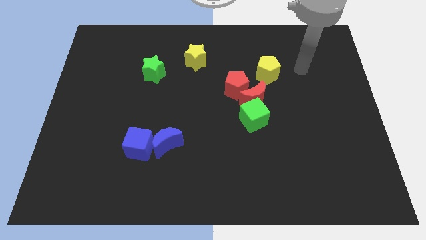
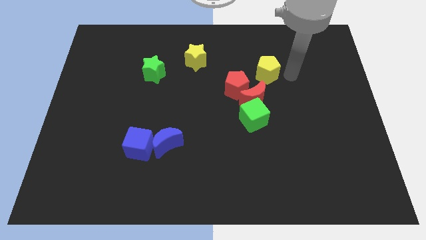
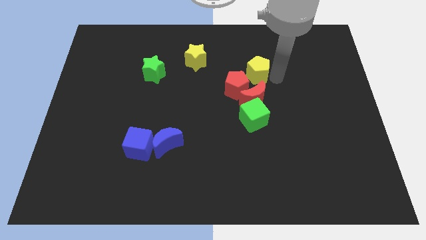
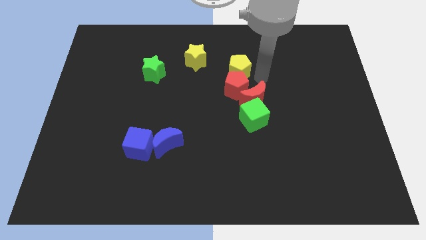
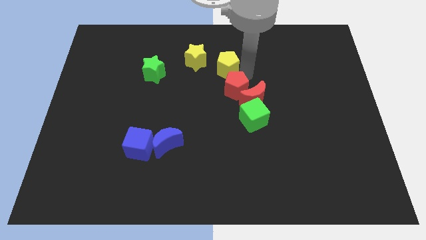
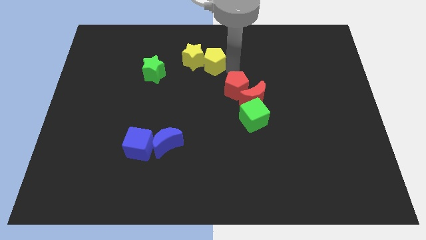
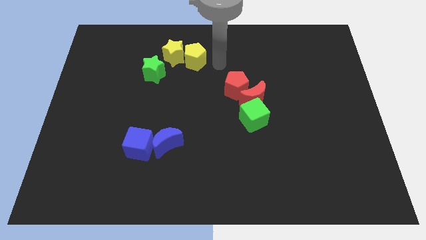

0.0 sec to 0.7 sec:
push the yellow pentagon to the right of the yellow star

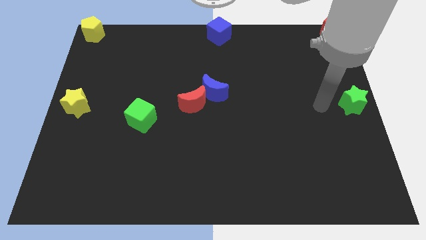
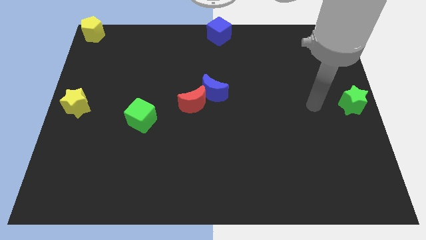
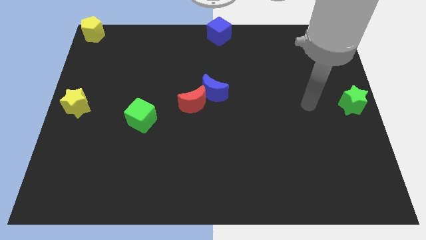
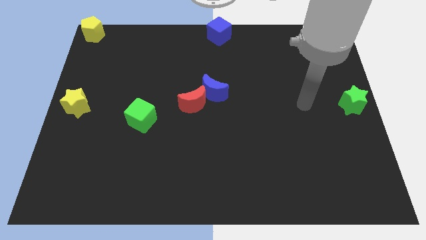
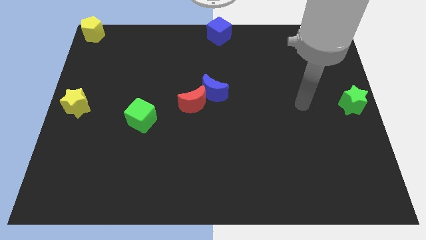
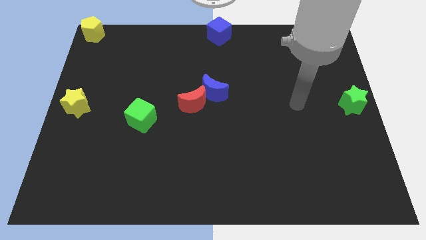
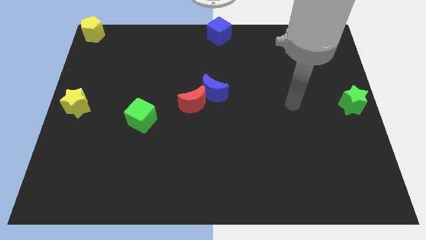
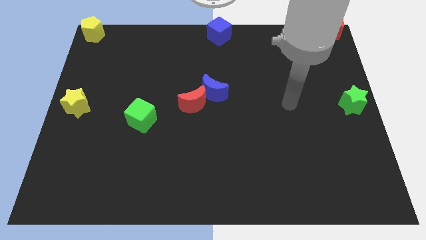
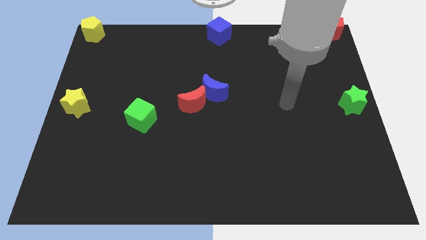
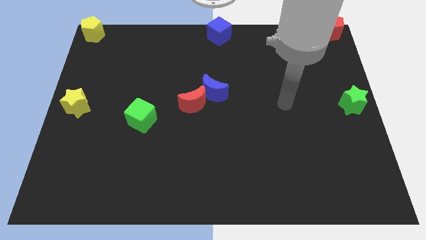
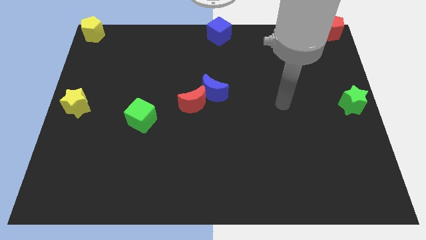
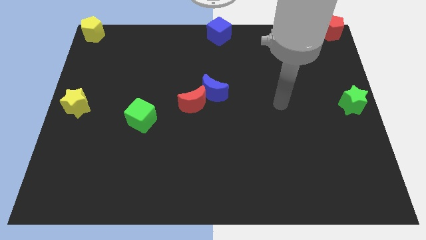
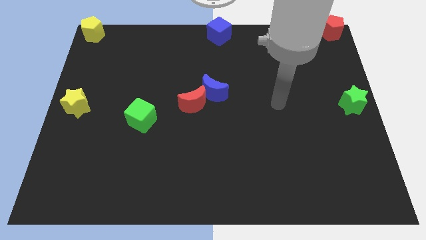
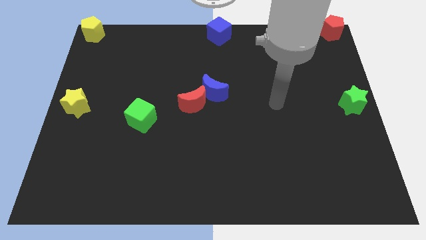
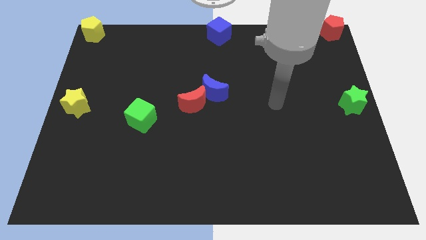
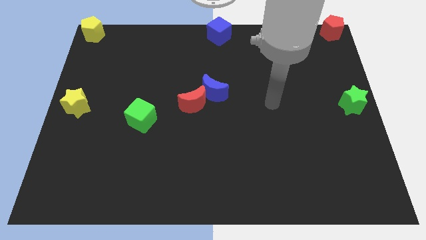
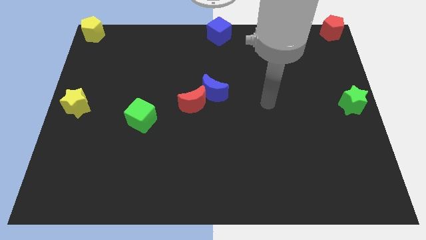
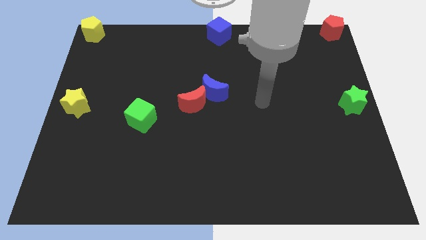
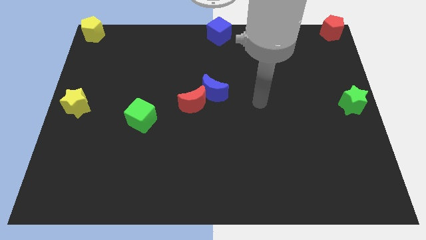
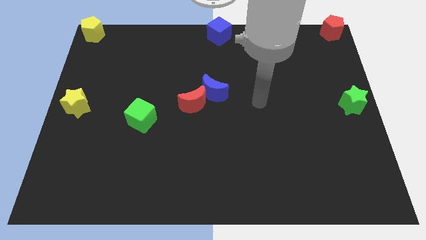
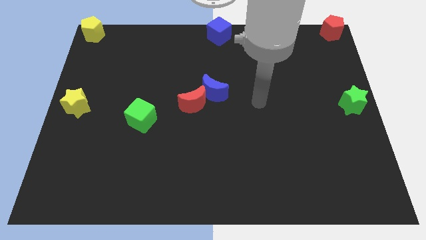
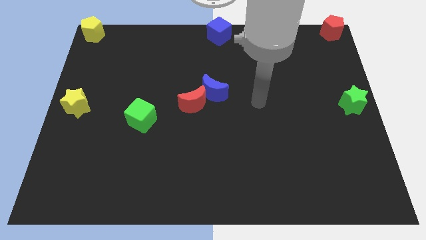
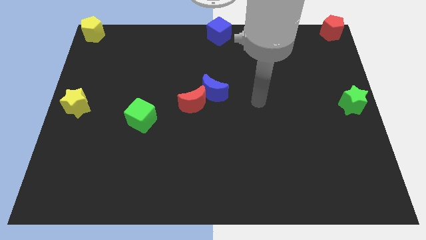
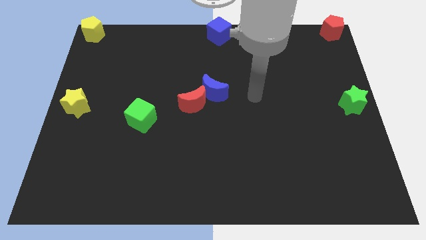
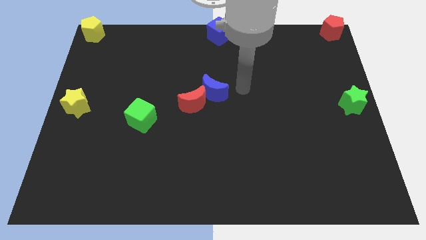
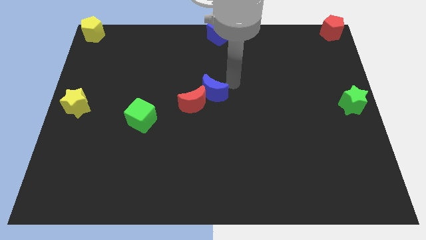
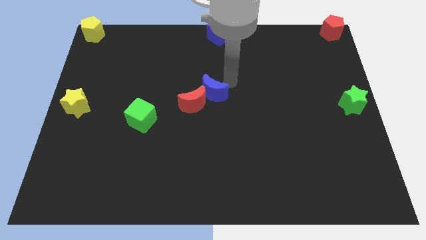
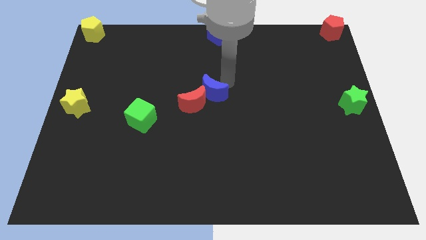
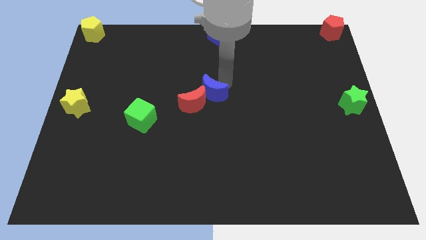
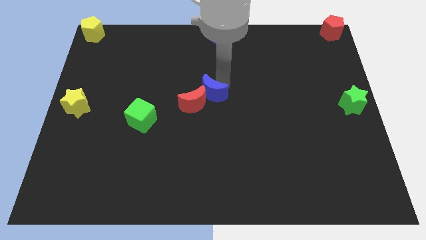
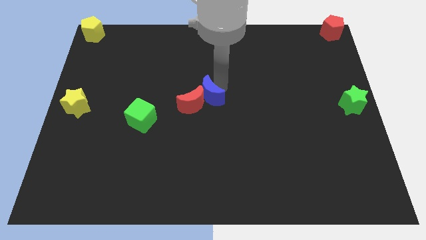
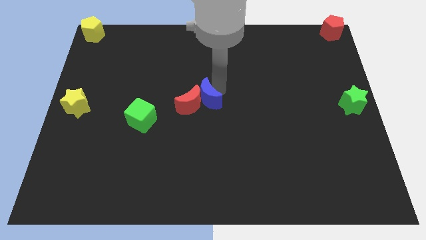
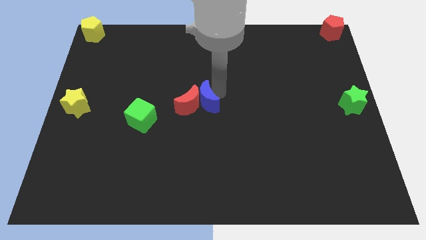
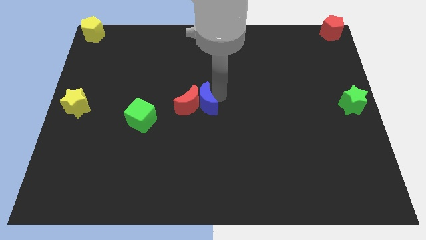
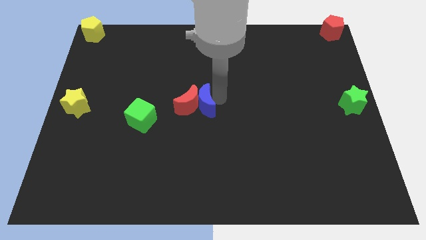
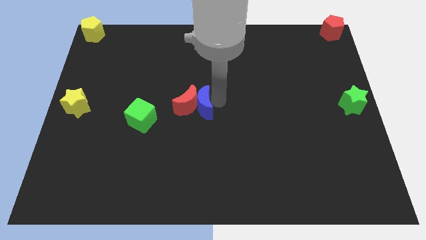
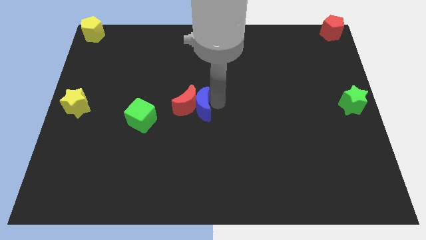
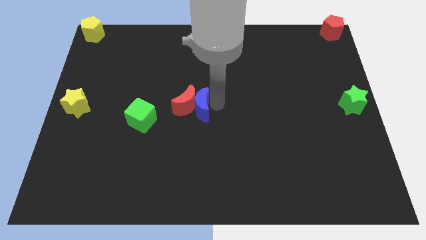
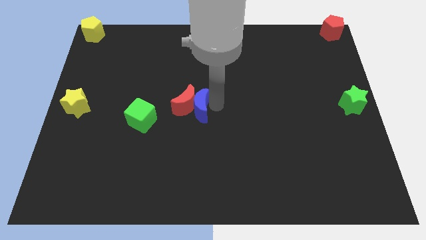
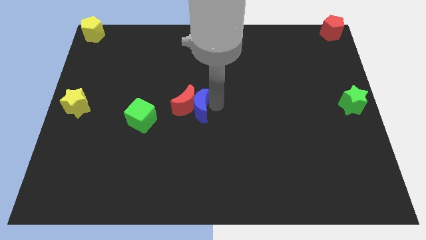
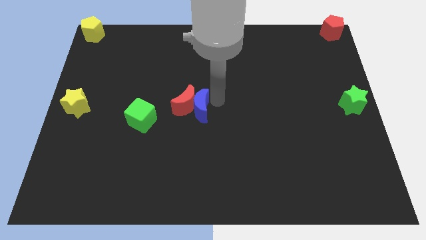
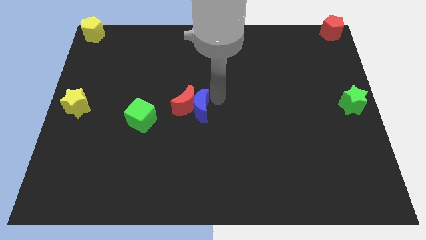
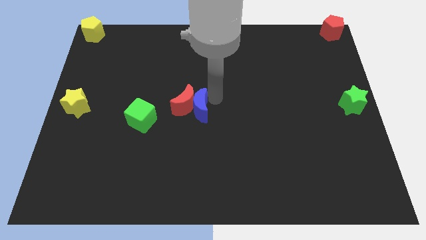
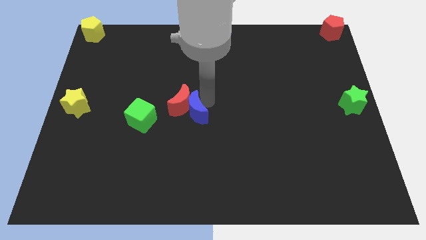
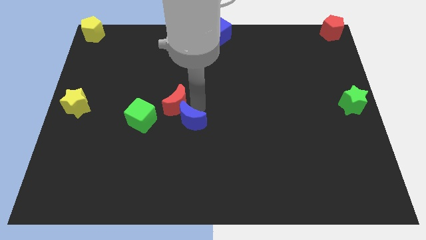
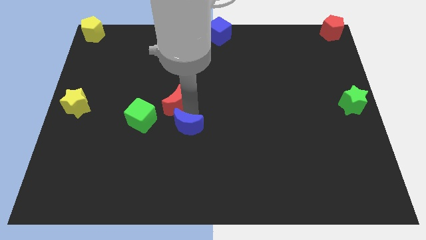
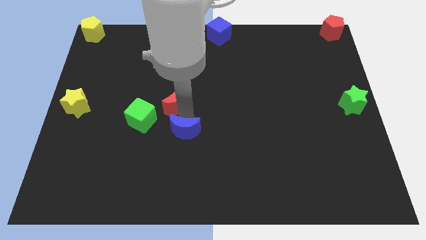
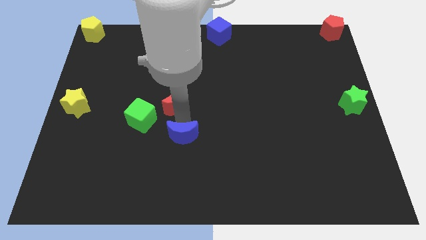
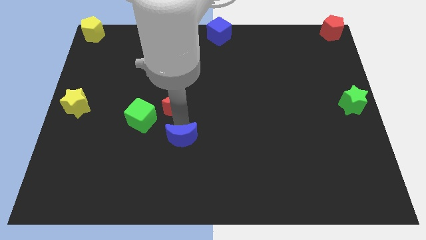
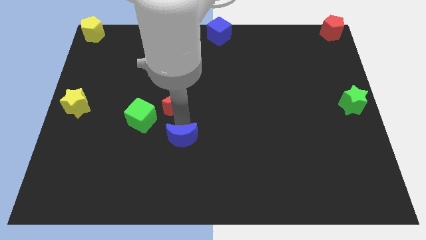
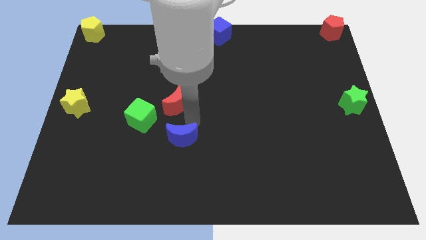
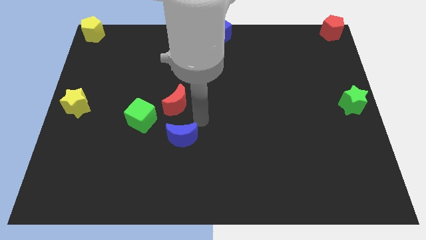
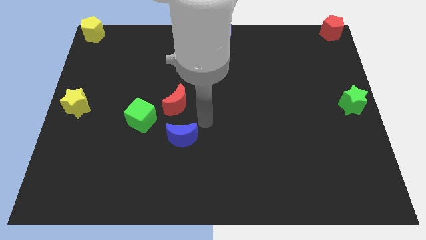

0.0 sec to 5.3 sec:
separate the blue moon from the red moon

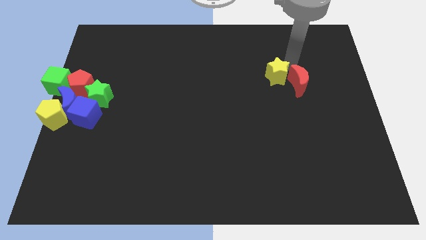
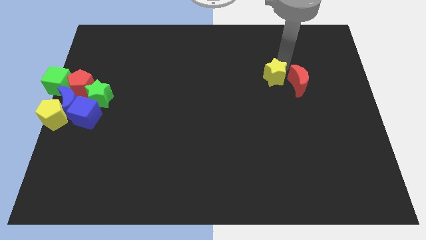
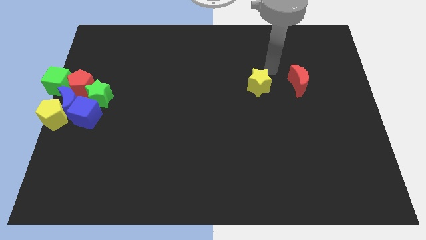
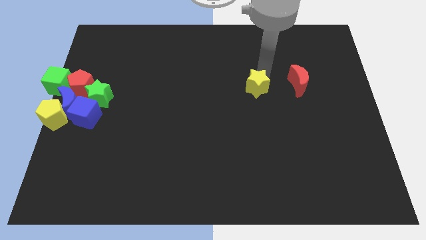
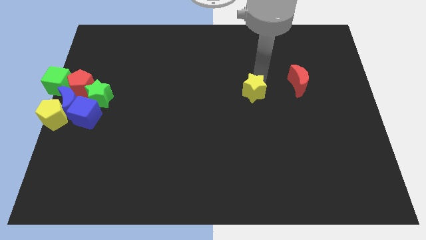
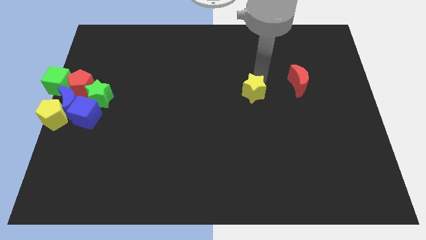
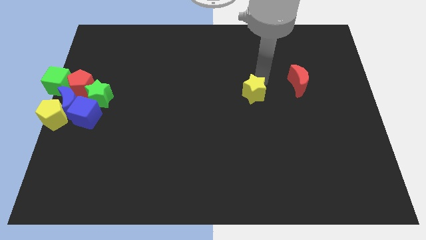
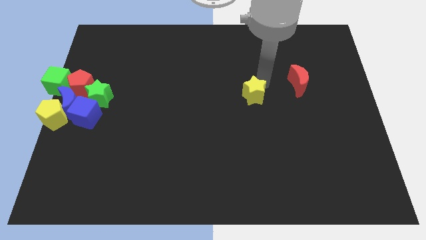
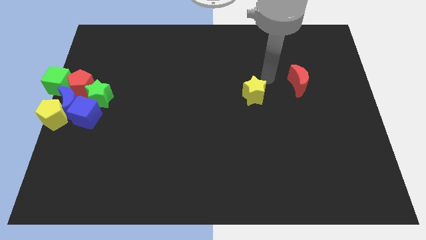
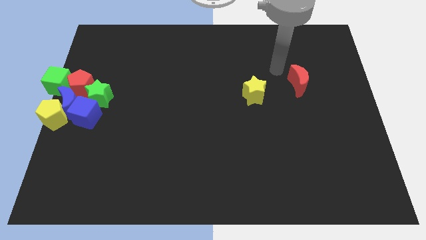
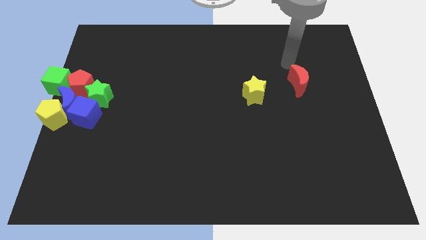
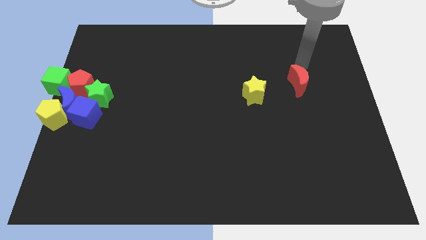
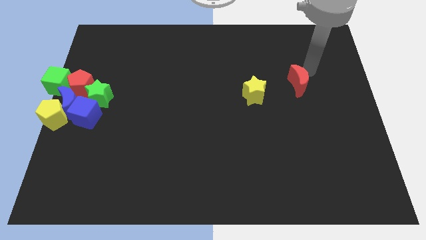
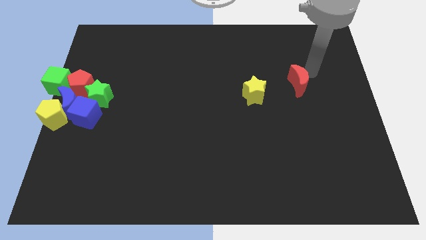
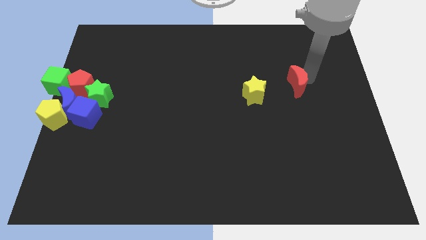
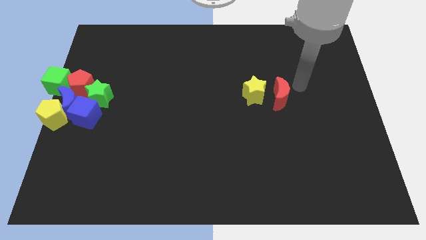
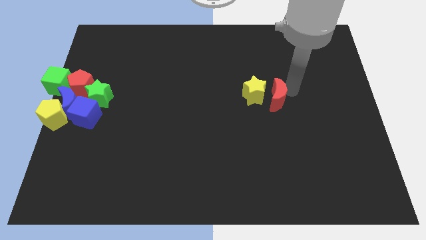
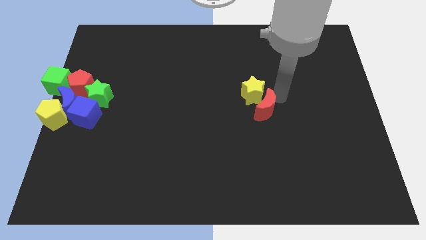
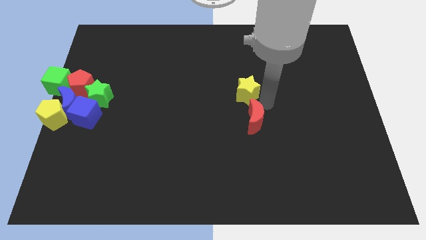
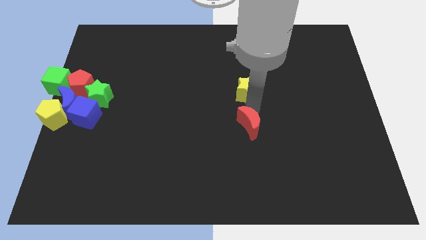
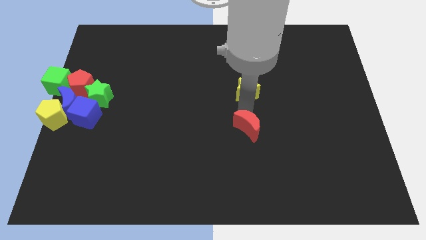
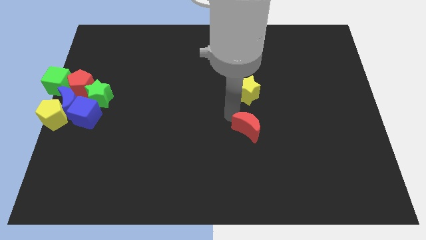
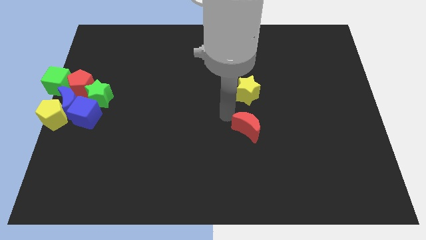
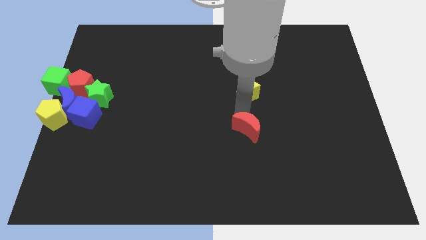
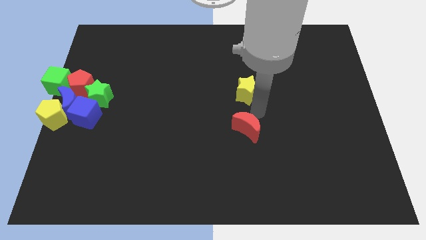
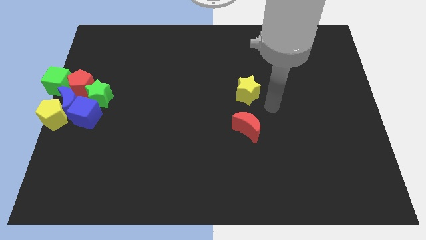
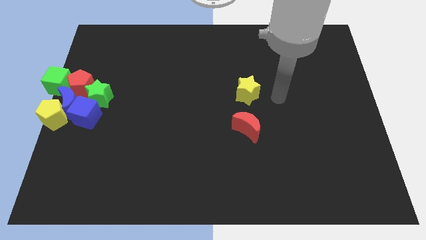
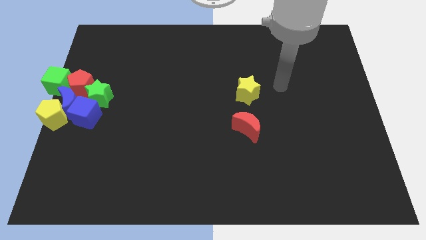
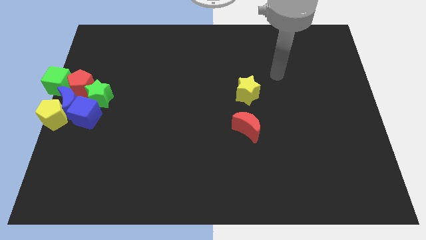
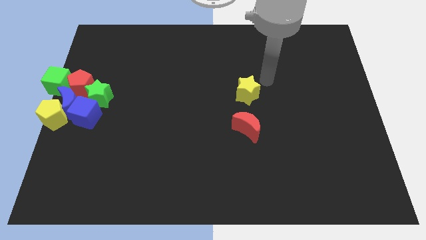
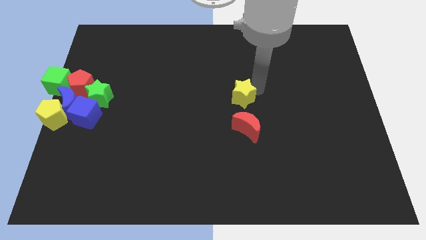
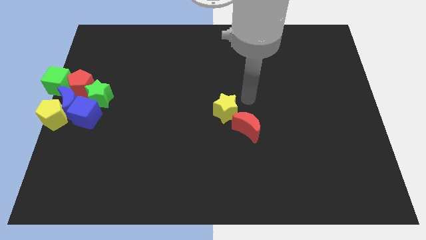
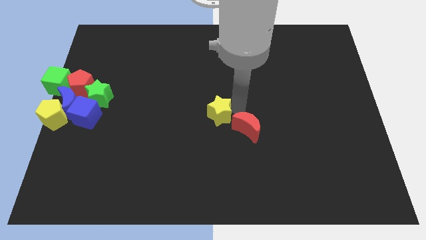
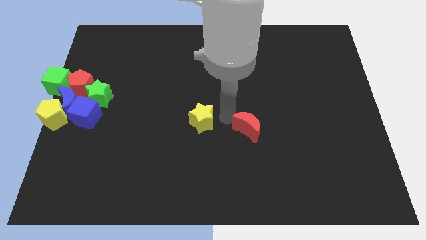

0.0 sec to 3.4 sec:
separate the yellow star from the red crescent
